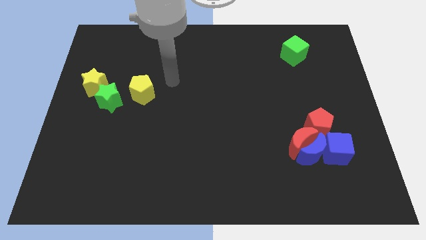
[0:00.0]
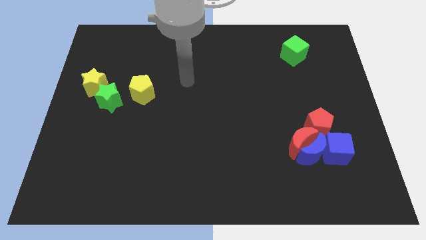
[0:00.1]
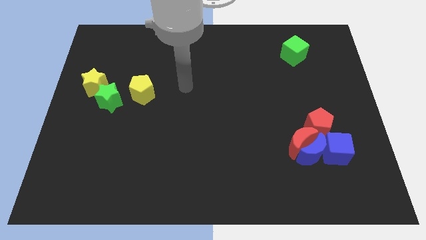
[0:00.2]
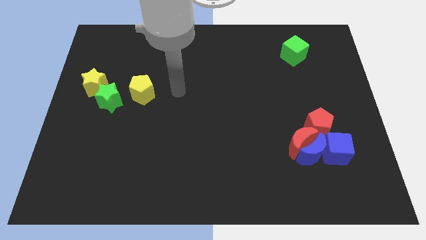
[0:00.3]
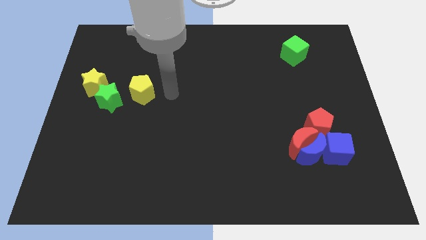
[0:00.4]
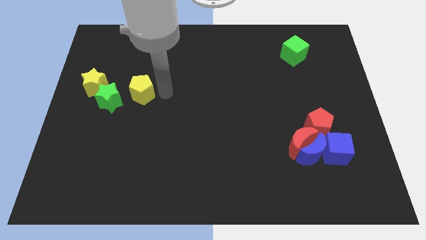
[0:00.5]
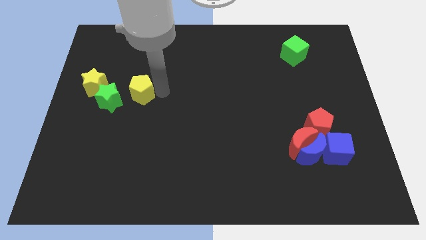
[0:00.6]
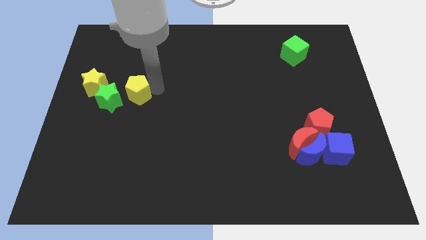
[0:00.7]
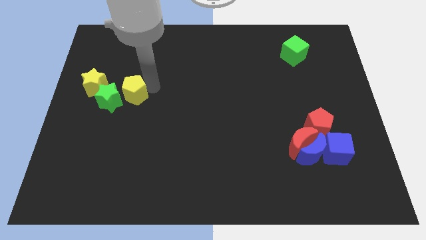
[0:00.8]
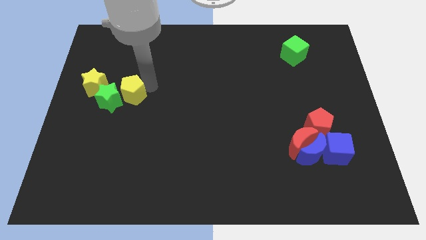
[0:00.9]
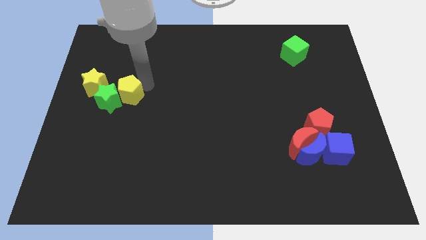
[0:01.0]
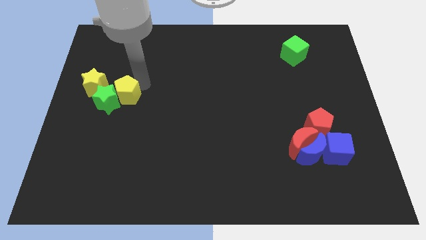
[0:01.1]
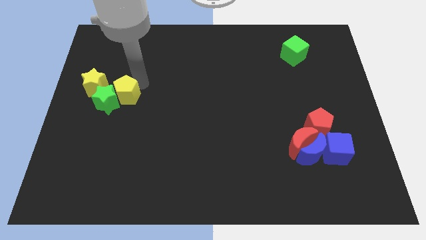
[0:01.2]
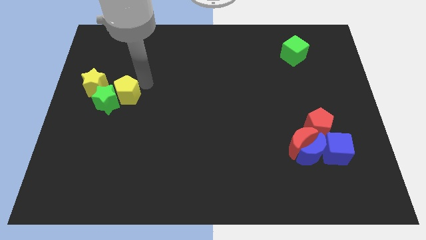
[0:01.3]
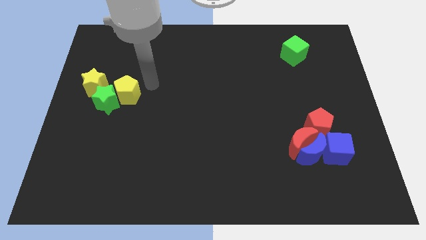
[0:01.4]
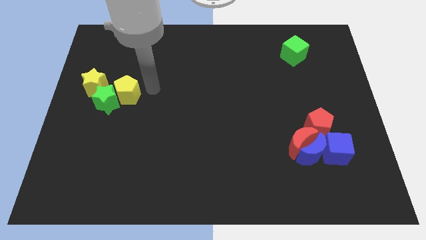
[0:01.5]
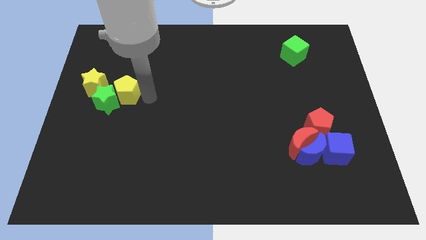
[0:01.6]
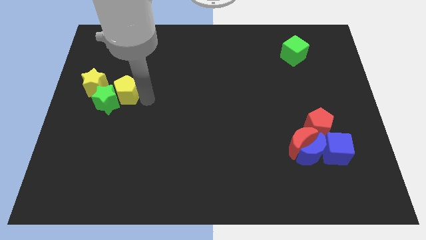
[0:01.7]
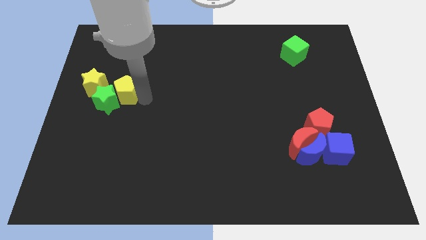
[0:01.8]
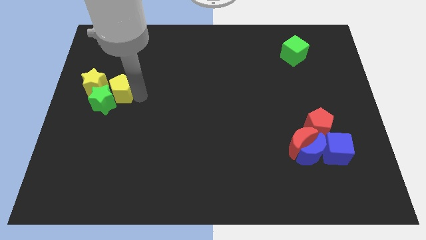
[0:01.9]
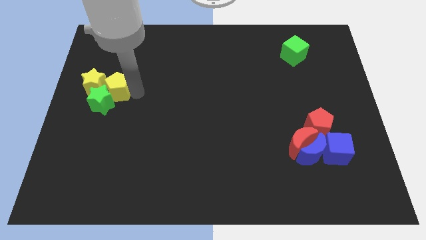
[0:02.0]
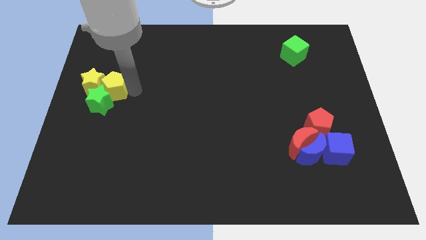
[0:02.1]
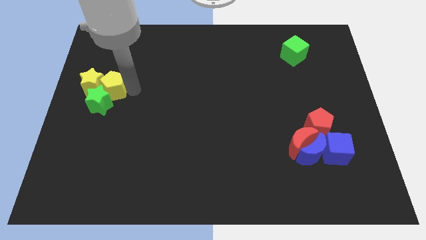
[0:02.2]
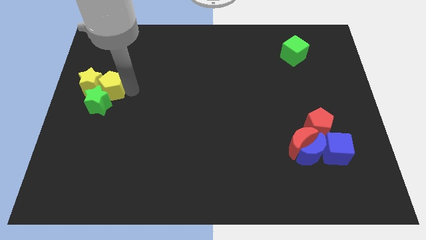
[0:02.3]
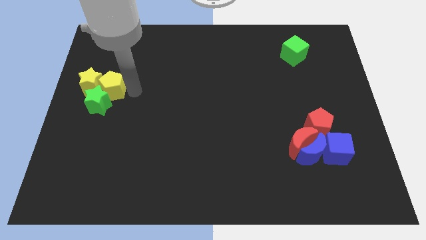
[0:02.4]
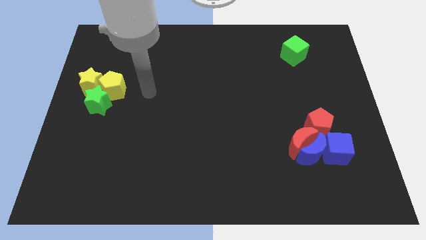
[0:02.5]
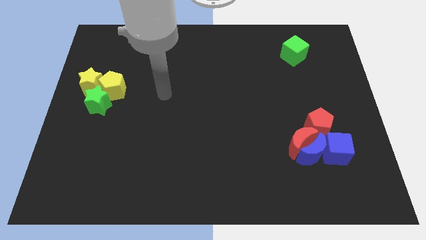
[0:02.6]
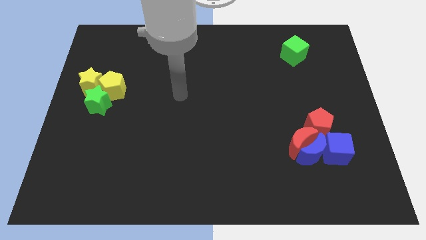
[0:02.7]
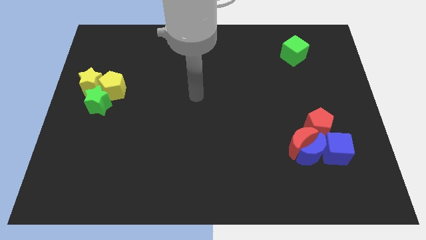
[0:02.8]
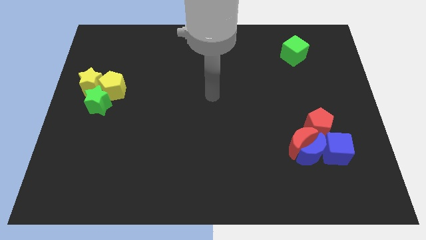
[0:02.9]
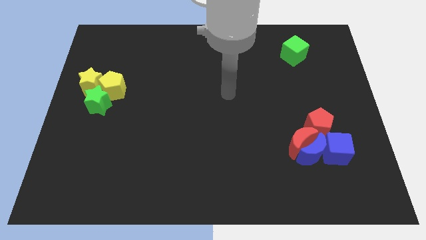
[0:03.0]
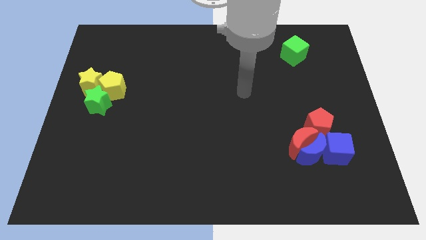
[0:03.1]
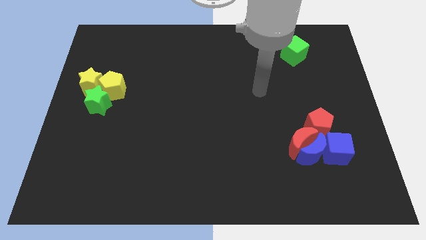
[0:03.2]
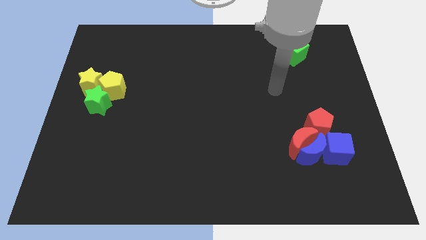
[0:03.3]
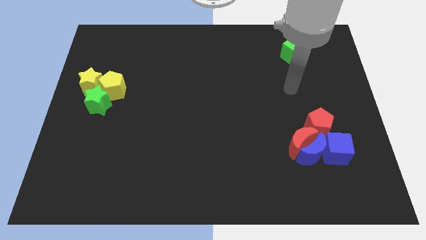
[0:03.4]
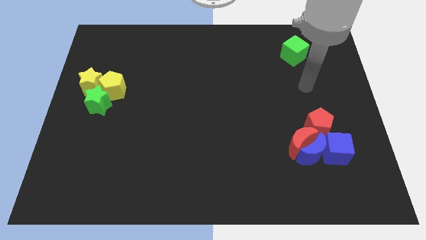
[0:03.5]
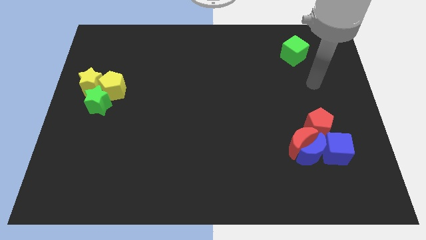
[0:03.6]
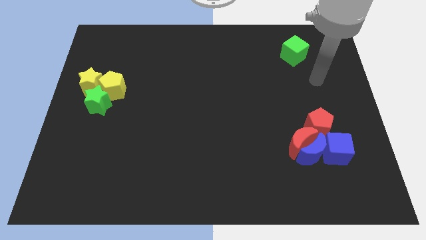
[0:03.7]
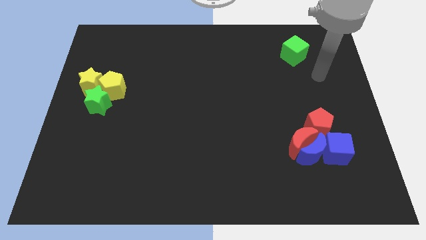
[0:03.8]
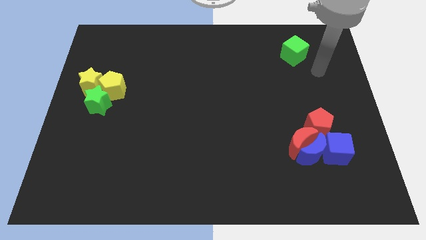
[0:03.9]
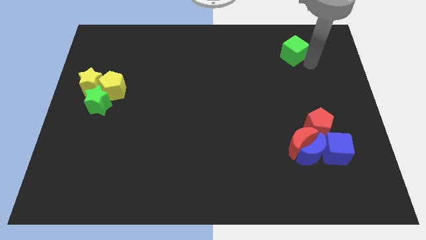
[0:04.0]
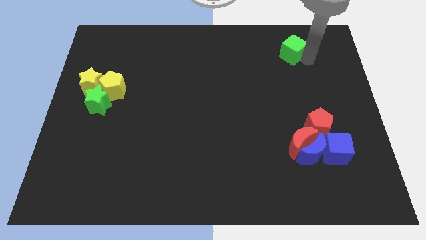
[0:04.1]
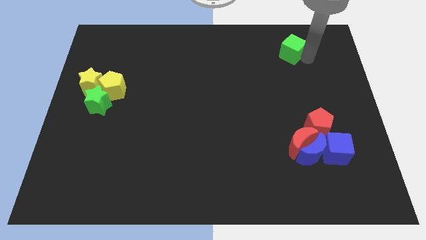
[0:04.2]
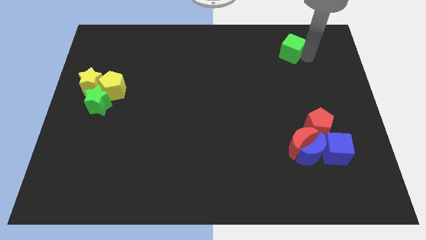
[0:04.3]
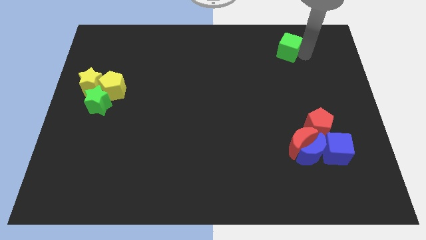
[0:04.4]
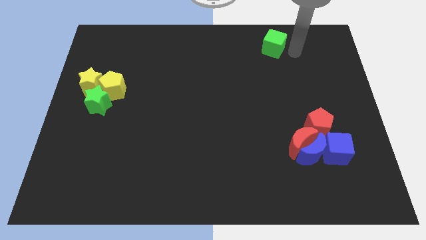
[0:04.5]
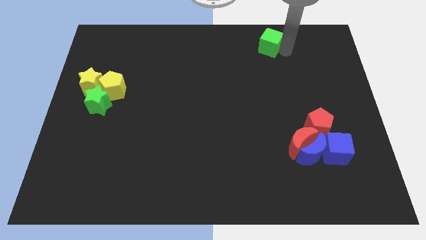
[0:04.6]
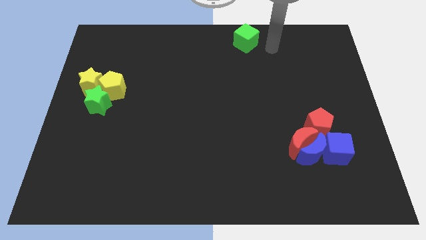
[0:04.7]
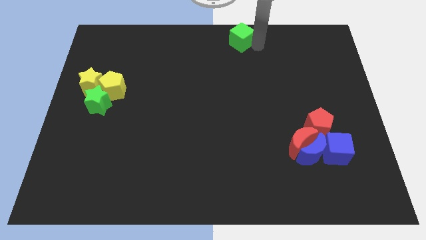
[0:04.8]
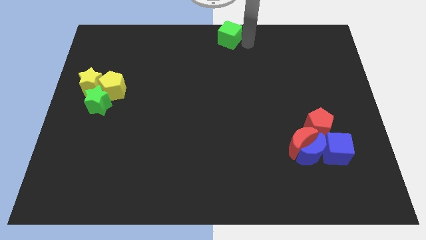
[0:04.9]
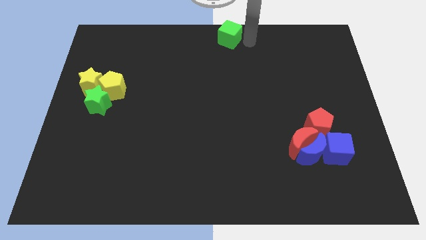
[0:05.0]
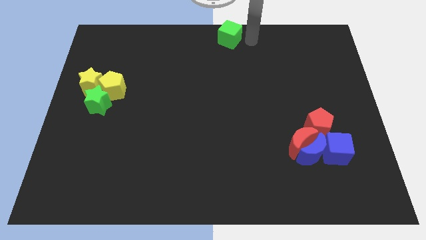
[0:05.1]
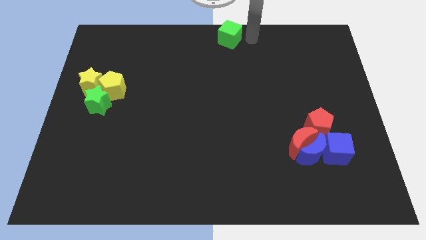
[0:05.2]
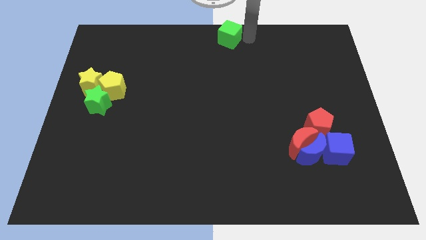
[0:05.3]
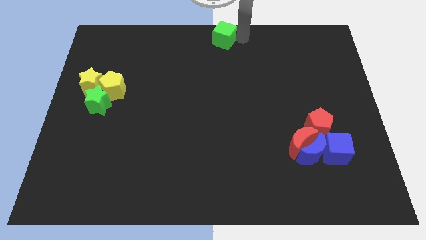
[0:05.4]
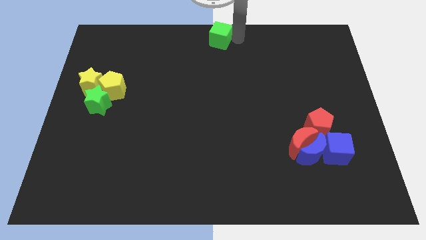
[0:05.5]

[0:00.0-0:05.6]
place the green cube at the top center

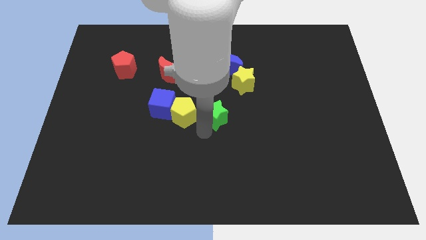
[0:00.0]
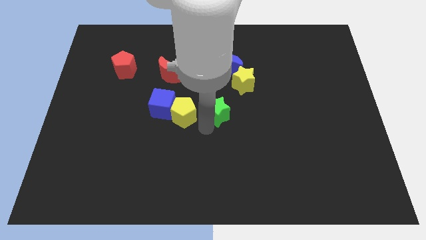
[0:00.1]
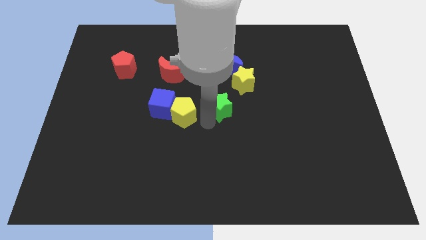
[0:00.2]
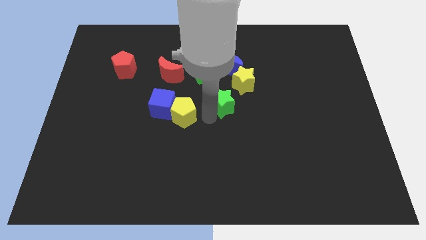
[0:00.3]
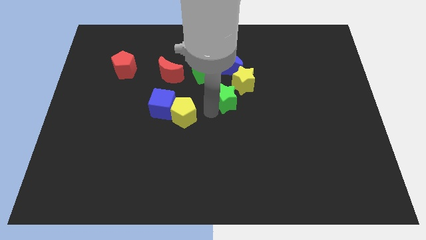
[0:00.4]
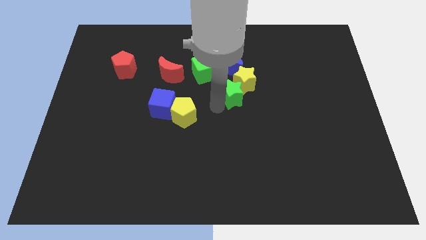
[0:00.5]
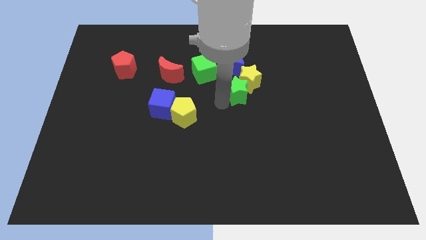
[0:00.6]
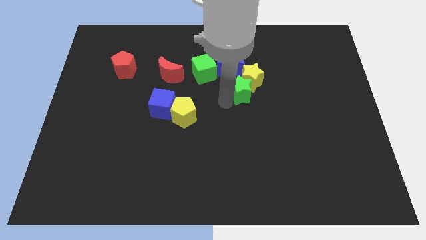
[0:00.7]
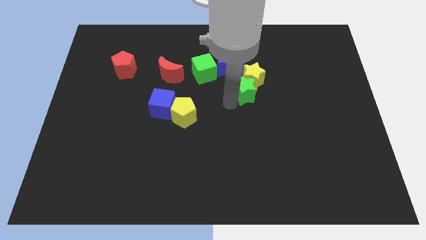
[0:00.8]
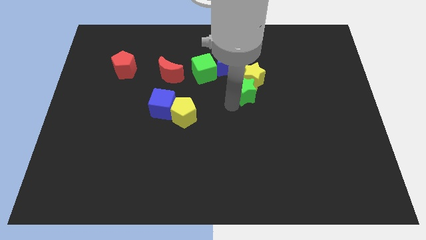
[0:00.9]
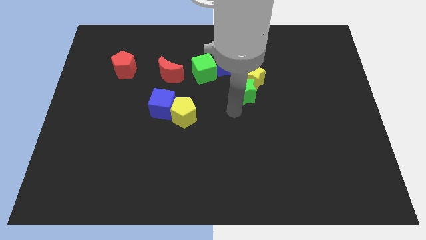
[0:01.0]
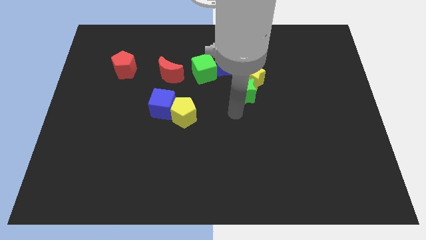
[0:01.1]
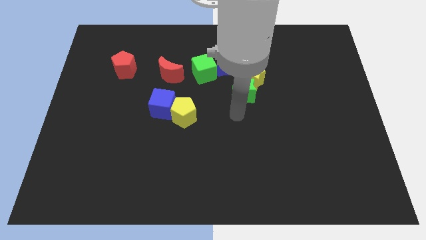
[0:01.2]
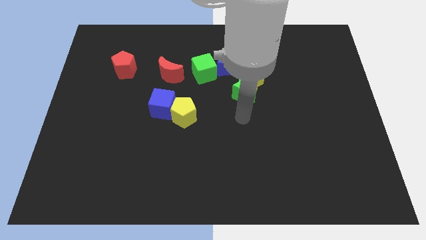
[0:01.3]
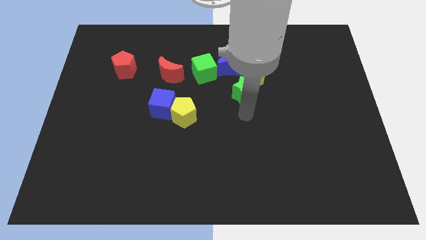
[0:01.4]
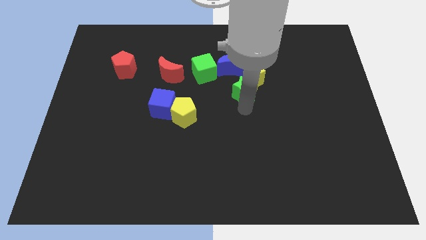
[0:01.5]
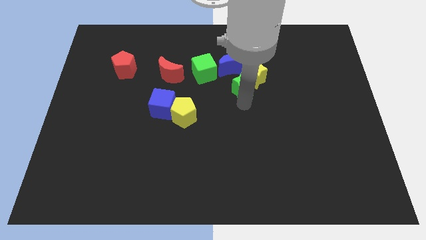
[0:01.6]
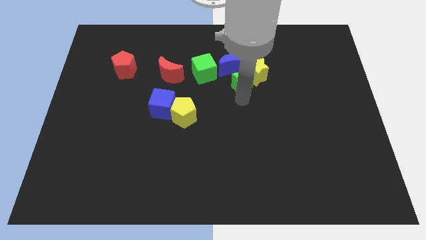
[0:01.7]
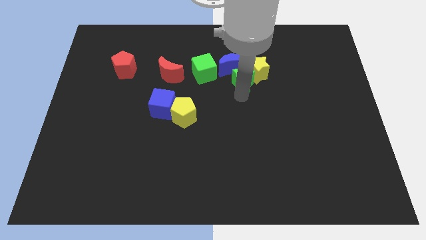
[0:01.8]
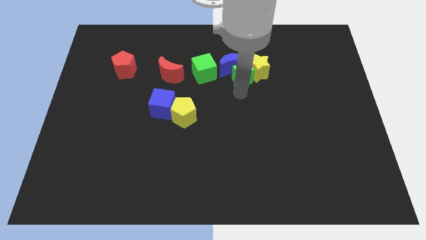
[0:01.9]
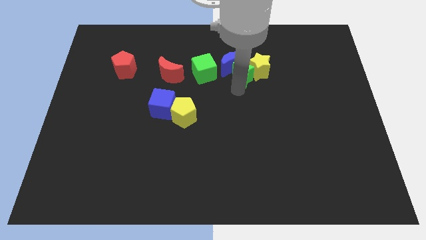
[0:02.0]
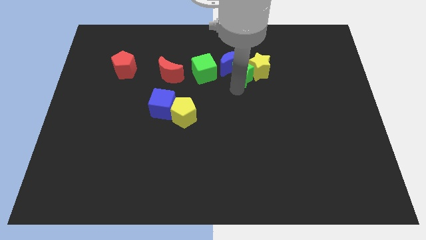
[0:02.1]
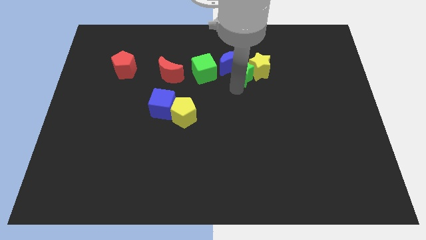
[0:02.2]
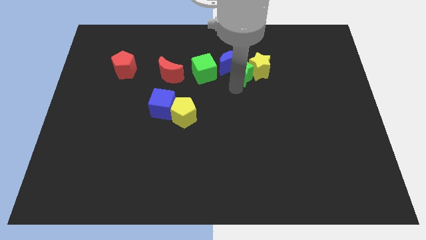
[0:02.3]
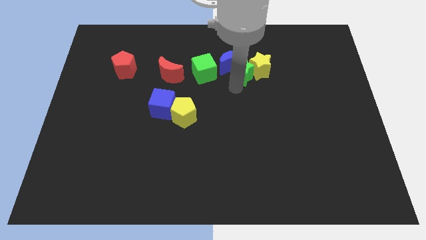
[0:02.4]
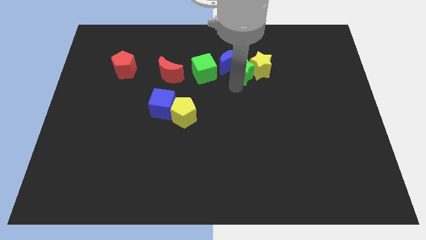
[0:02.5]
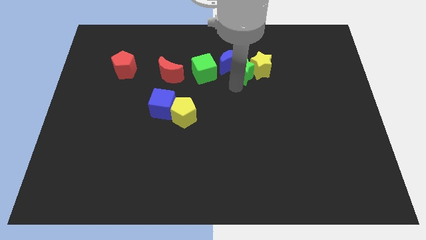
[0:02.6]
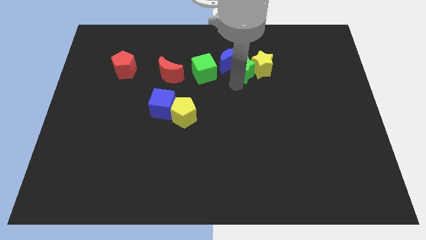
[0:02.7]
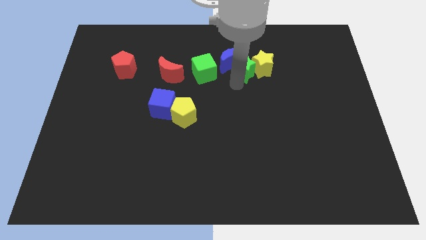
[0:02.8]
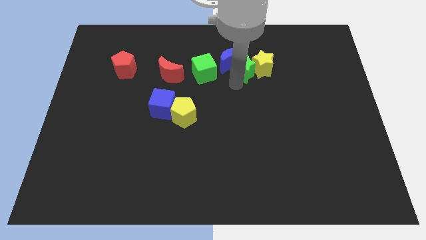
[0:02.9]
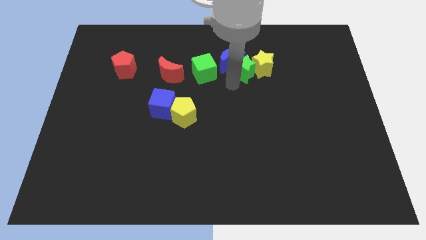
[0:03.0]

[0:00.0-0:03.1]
put the green star into the yellow star

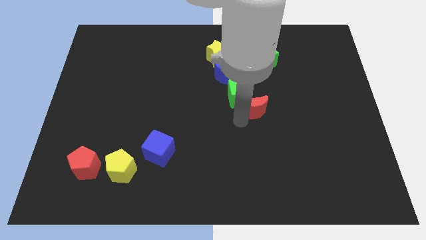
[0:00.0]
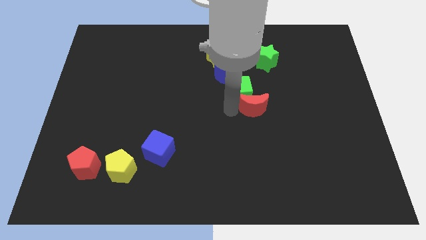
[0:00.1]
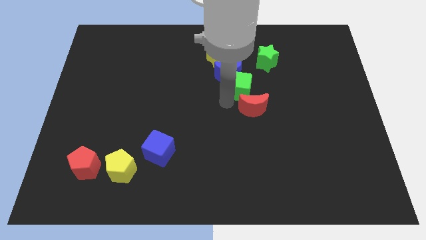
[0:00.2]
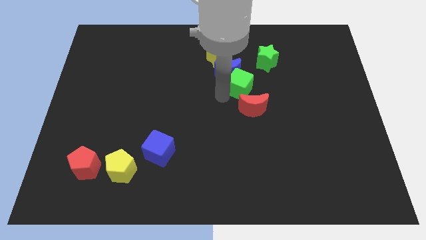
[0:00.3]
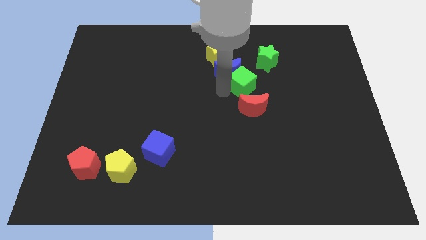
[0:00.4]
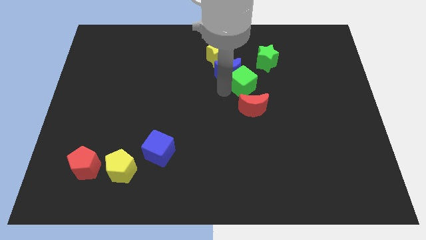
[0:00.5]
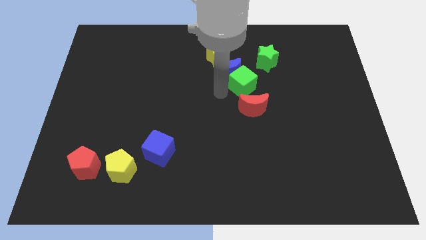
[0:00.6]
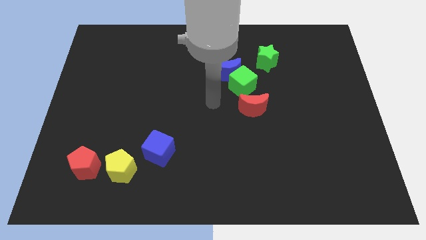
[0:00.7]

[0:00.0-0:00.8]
move the green cube down to the blue moon
